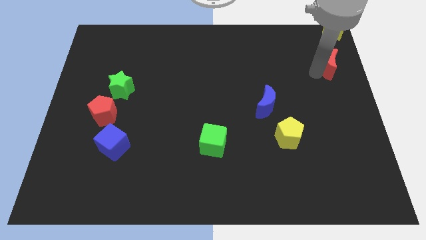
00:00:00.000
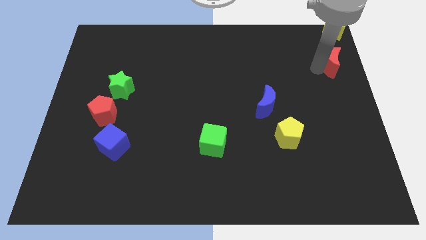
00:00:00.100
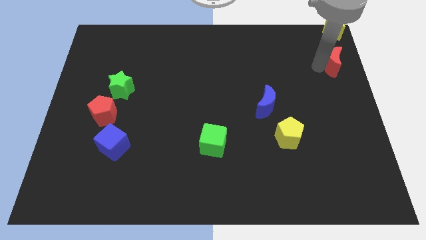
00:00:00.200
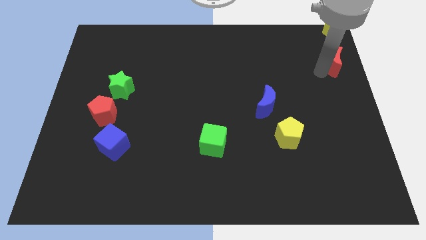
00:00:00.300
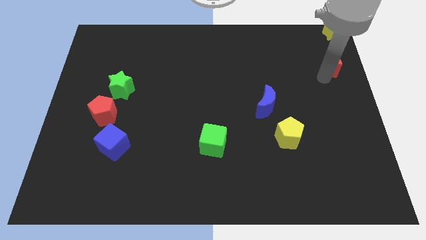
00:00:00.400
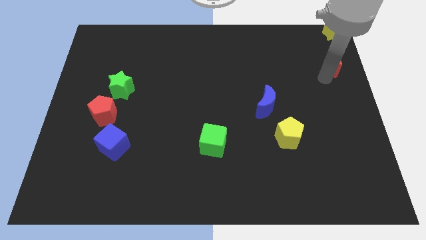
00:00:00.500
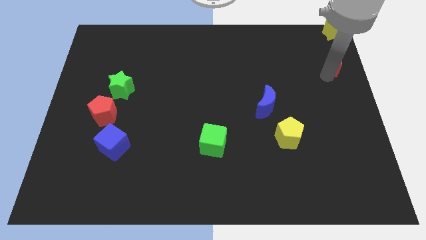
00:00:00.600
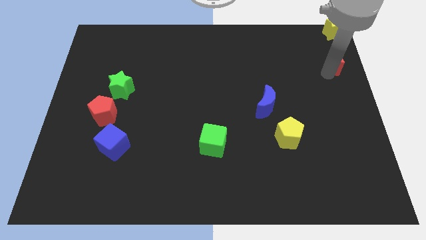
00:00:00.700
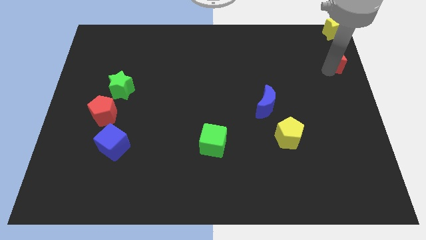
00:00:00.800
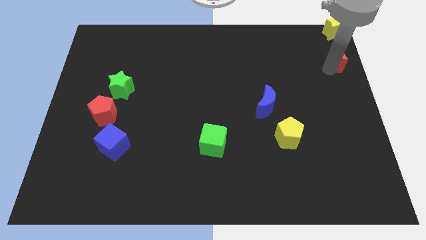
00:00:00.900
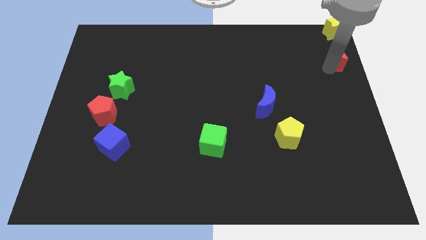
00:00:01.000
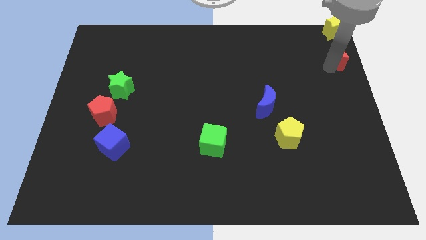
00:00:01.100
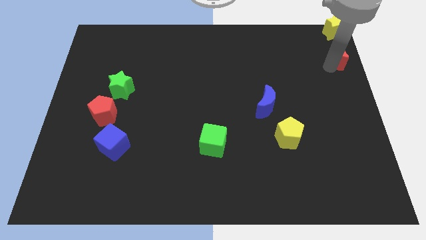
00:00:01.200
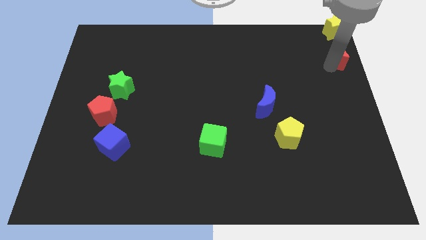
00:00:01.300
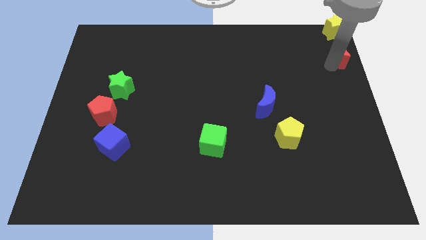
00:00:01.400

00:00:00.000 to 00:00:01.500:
place the red moon below the yellow star

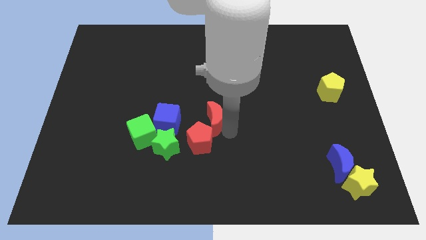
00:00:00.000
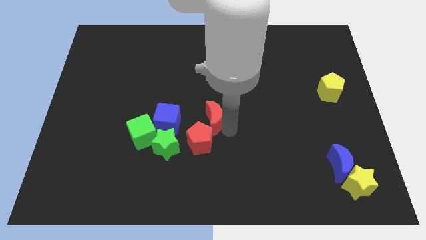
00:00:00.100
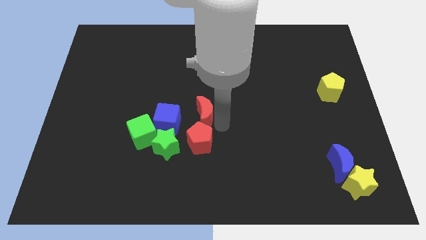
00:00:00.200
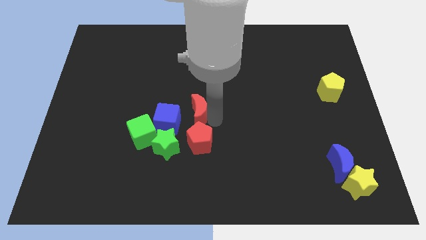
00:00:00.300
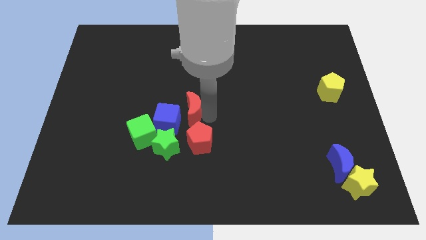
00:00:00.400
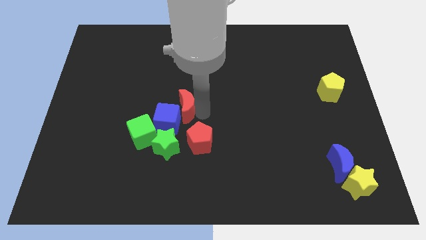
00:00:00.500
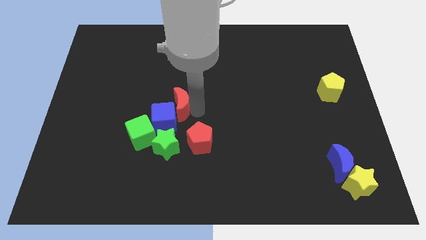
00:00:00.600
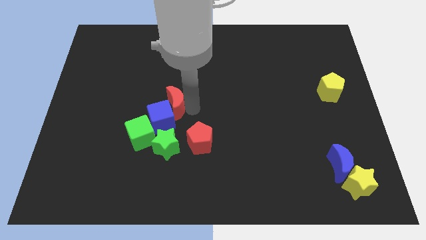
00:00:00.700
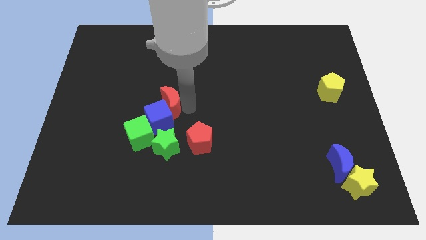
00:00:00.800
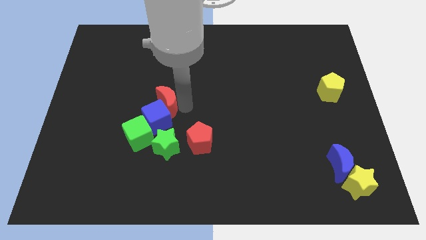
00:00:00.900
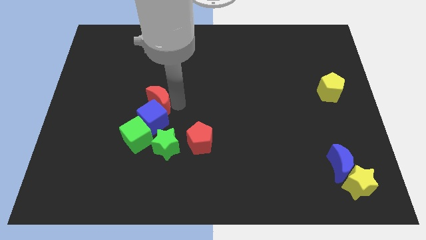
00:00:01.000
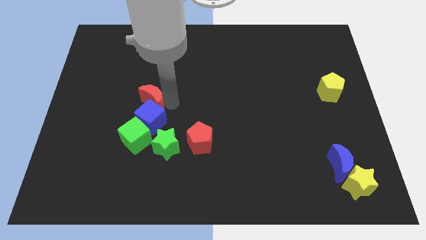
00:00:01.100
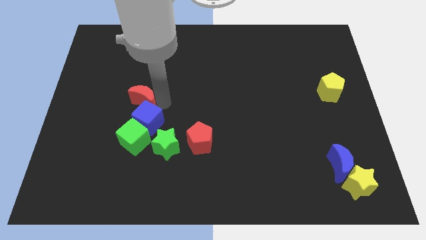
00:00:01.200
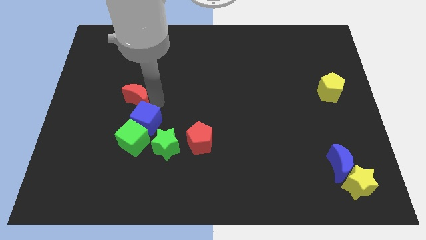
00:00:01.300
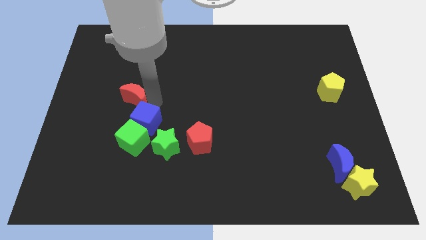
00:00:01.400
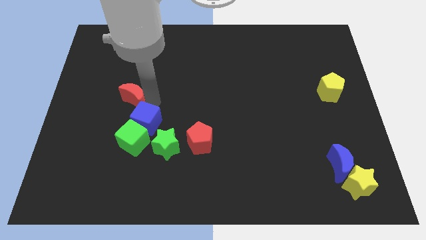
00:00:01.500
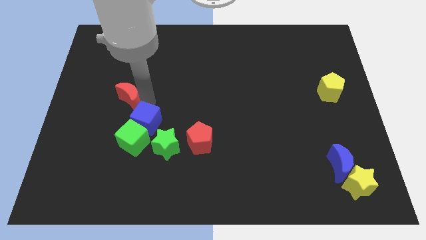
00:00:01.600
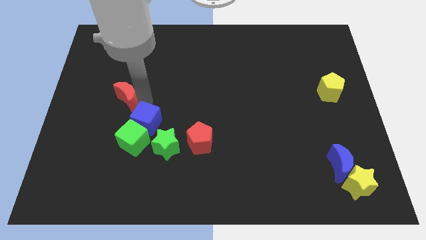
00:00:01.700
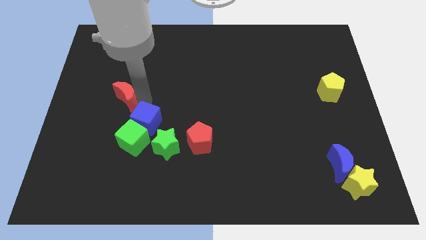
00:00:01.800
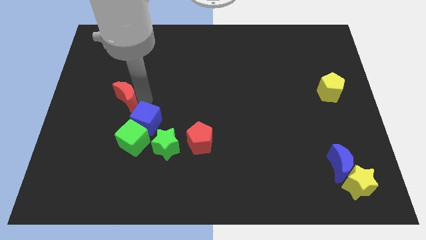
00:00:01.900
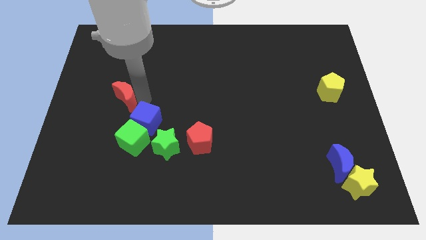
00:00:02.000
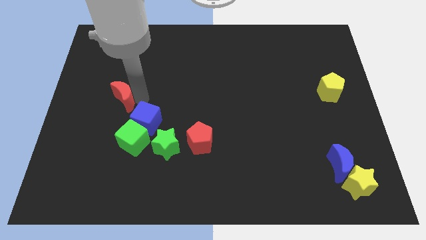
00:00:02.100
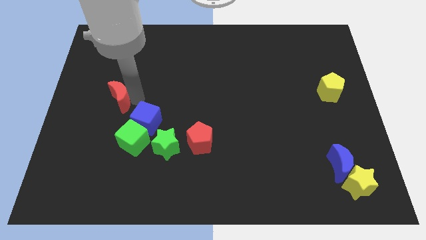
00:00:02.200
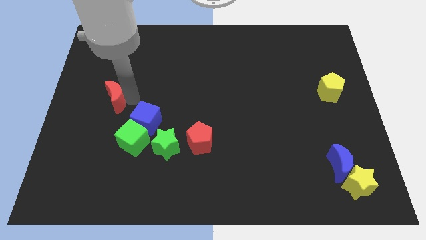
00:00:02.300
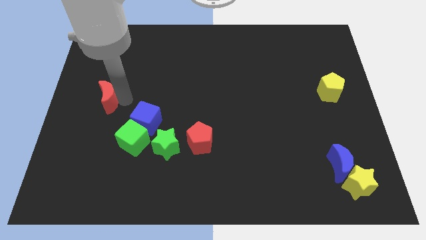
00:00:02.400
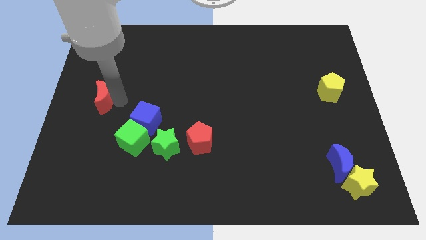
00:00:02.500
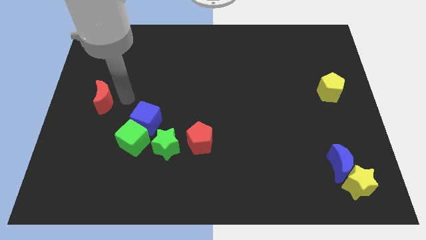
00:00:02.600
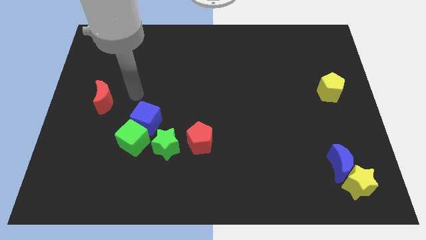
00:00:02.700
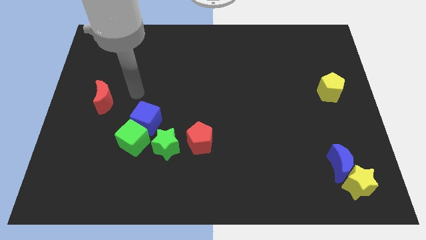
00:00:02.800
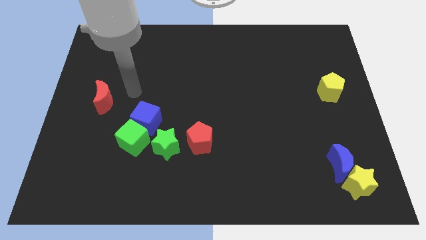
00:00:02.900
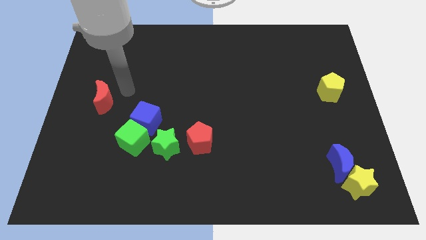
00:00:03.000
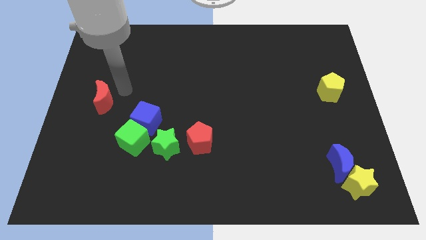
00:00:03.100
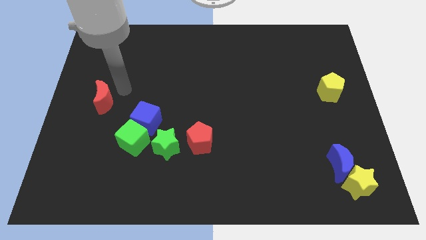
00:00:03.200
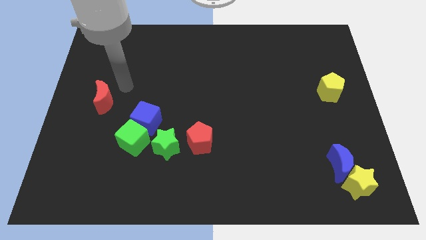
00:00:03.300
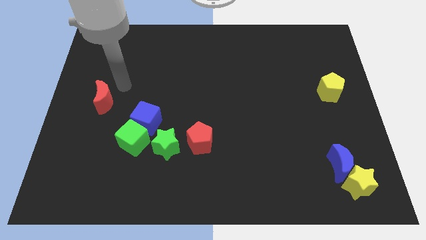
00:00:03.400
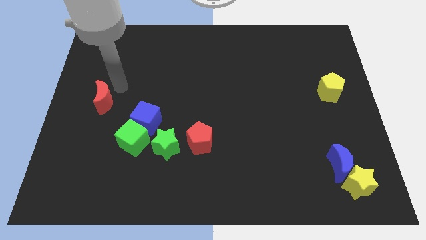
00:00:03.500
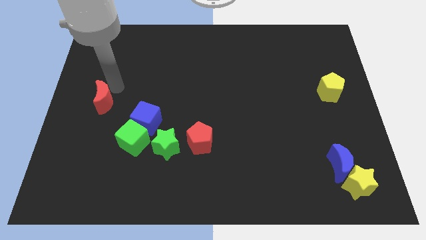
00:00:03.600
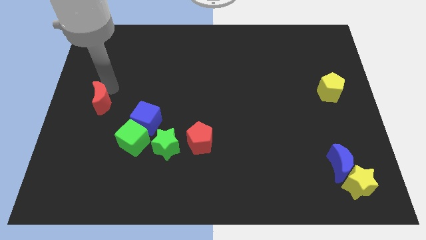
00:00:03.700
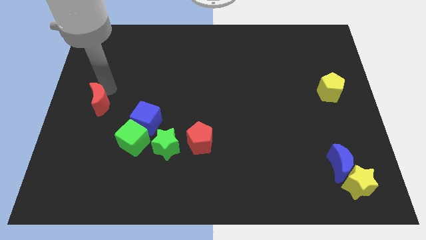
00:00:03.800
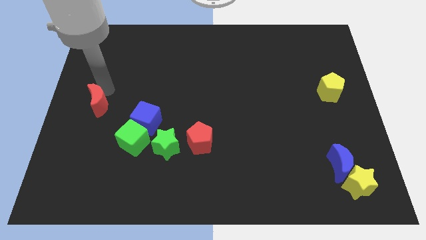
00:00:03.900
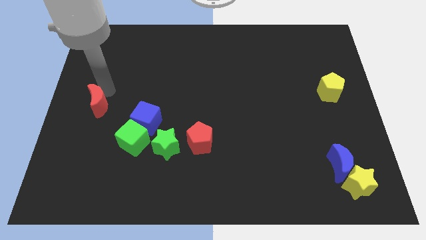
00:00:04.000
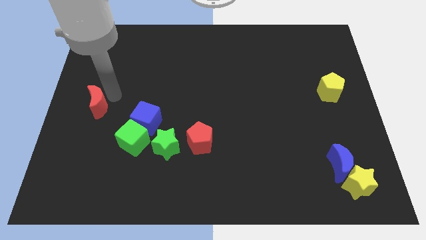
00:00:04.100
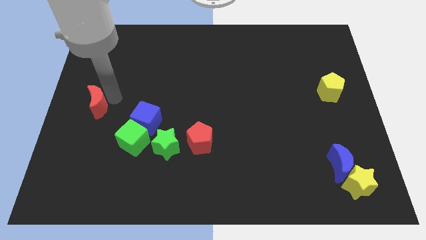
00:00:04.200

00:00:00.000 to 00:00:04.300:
move the red moon to the slight top left of blue cube

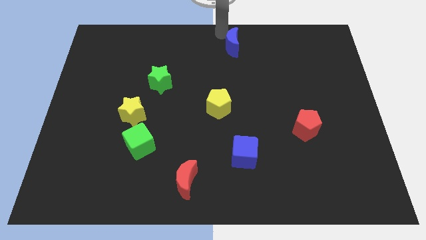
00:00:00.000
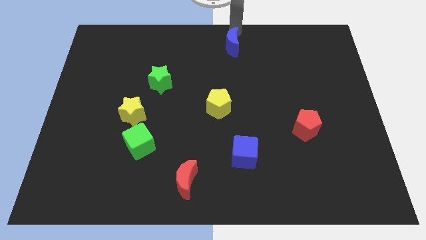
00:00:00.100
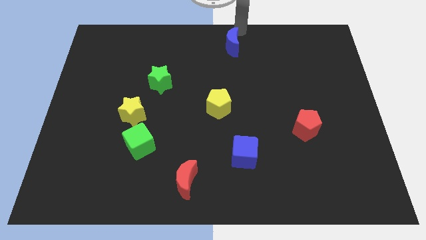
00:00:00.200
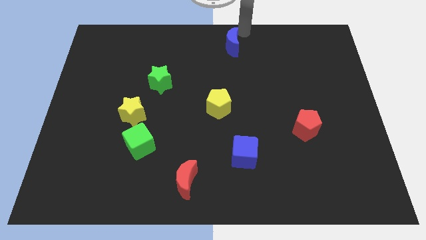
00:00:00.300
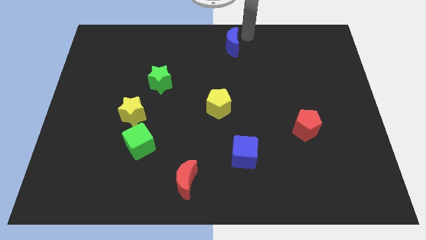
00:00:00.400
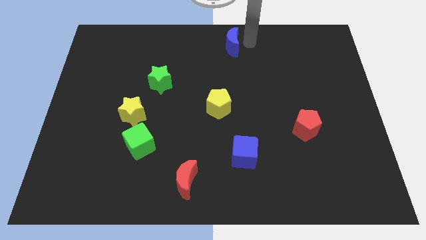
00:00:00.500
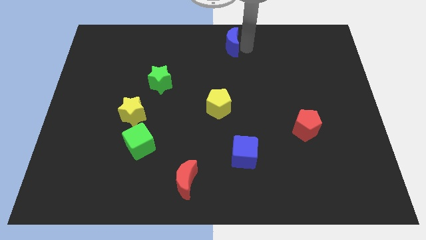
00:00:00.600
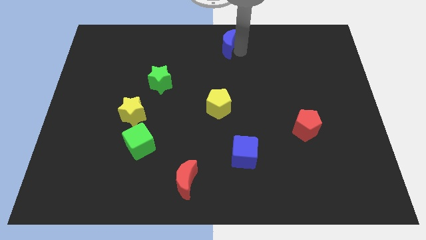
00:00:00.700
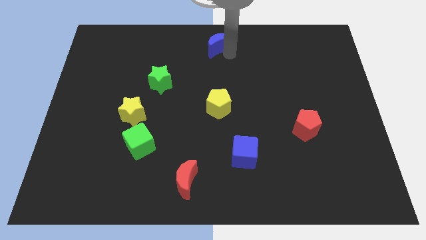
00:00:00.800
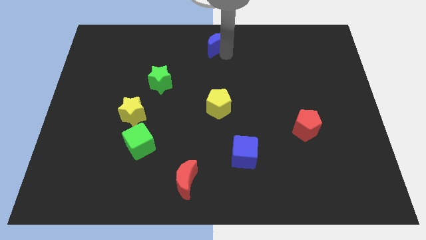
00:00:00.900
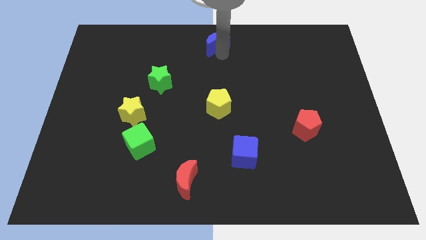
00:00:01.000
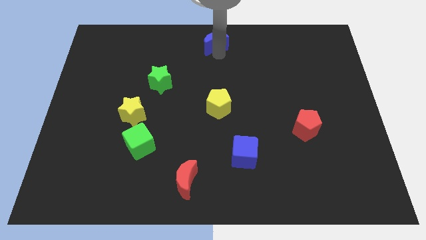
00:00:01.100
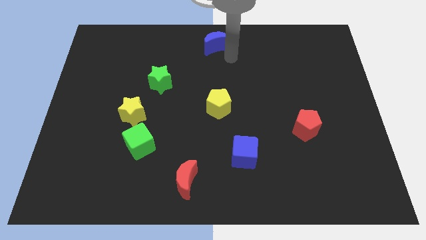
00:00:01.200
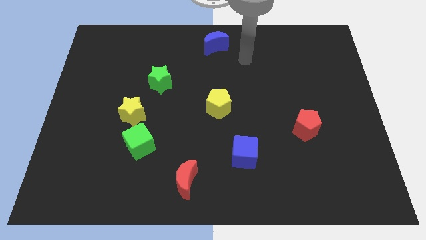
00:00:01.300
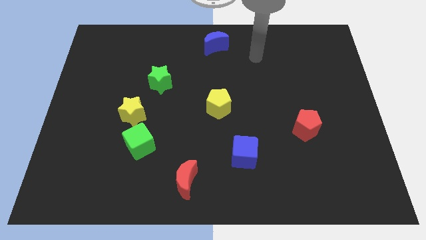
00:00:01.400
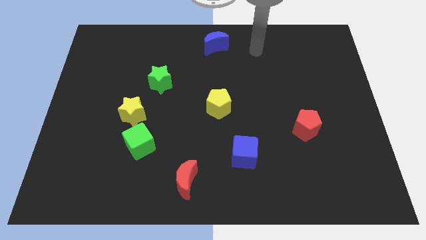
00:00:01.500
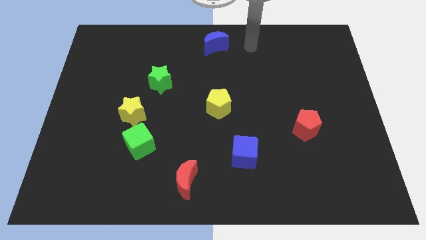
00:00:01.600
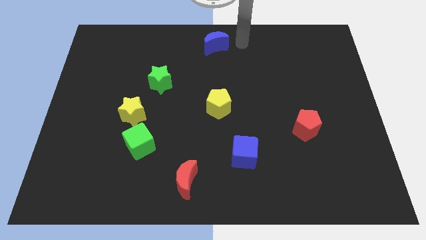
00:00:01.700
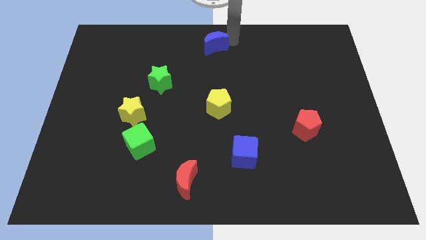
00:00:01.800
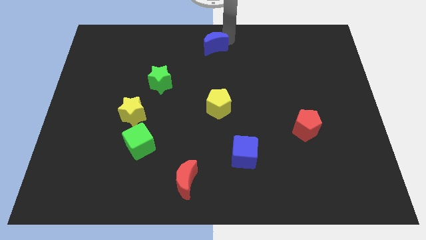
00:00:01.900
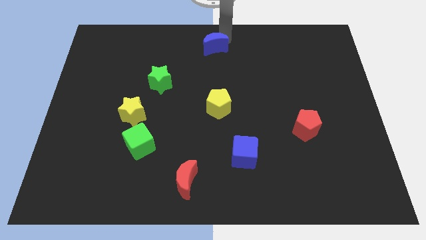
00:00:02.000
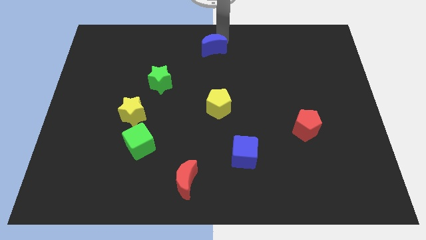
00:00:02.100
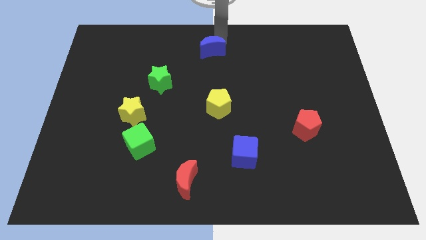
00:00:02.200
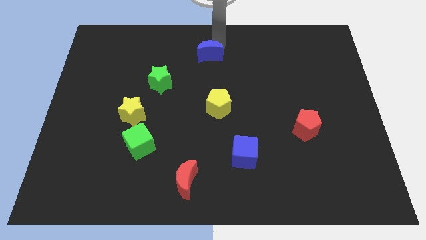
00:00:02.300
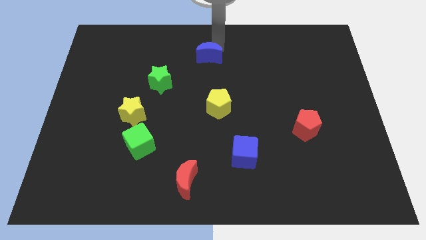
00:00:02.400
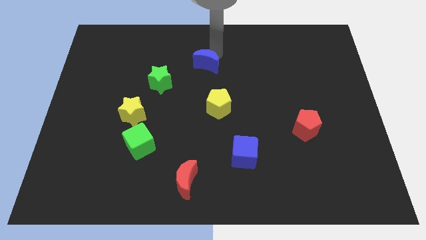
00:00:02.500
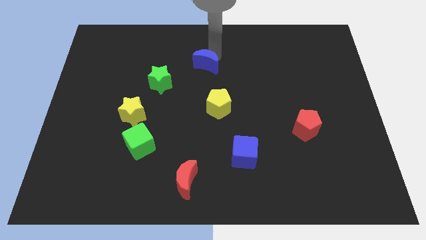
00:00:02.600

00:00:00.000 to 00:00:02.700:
push the blue crescent down towards the yellow pentagon

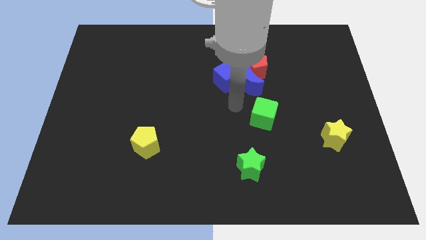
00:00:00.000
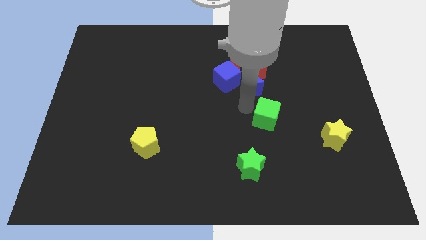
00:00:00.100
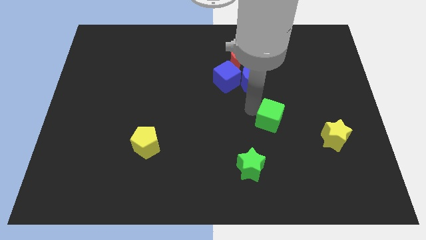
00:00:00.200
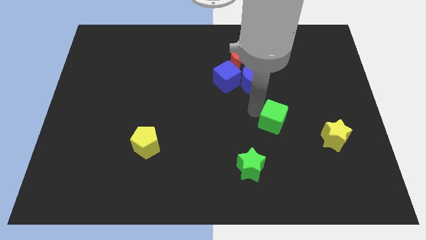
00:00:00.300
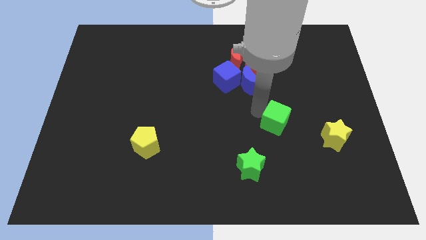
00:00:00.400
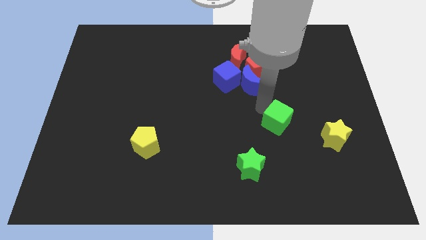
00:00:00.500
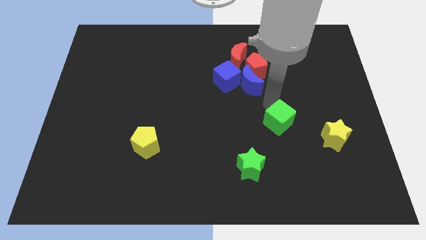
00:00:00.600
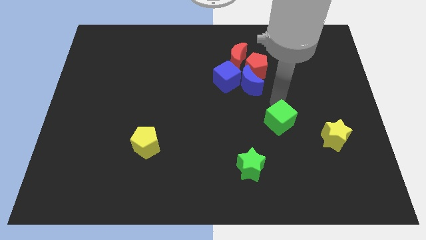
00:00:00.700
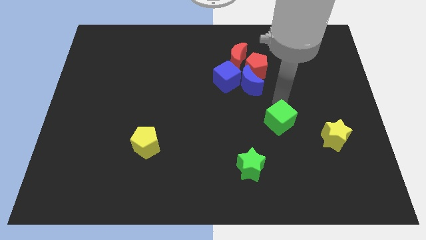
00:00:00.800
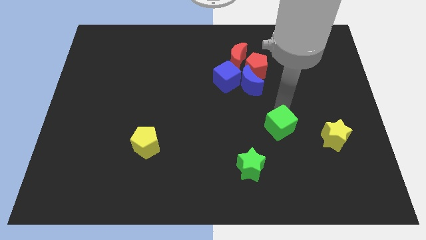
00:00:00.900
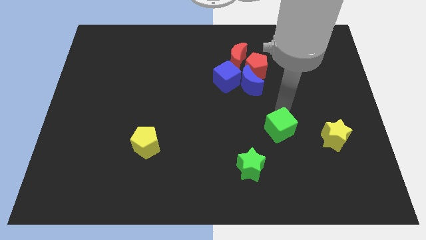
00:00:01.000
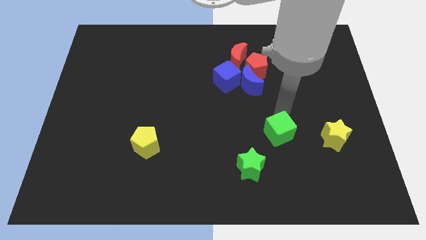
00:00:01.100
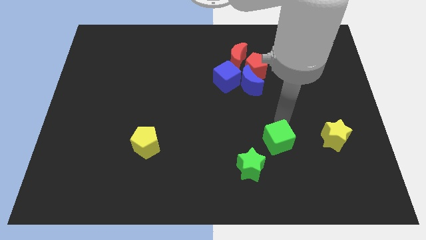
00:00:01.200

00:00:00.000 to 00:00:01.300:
place the green cube horizontally left to the yellow star
